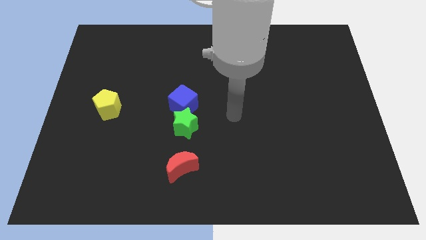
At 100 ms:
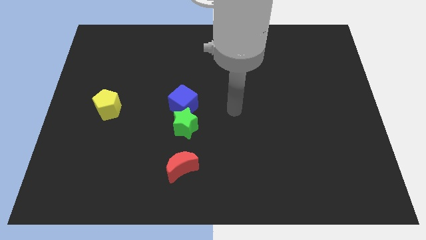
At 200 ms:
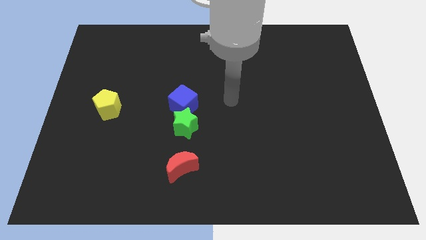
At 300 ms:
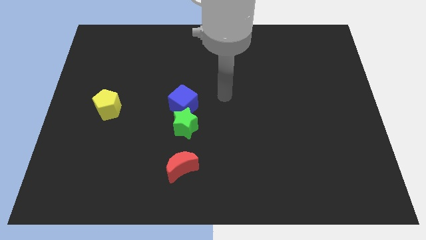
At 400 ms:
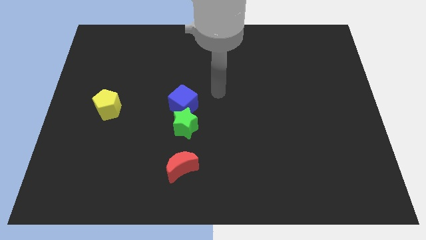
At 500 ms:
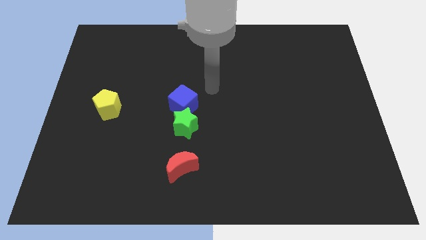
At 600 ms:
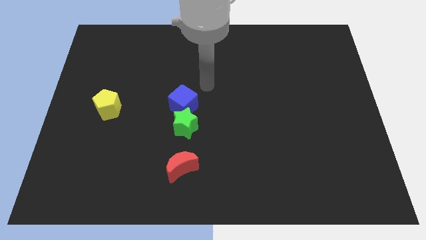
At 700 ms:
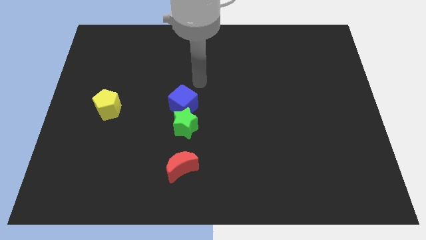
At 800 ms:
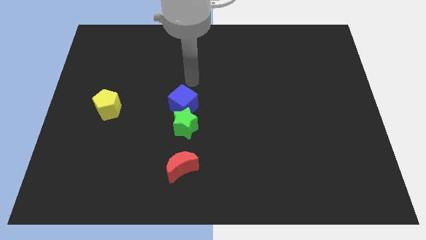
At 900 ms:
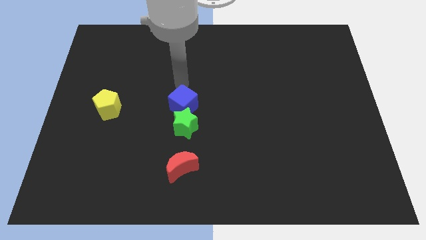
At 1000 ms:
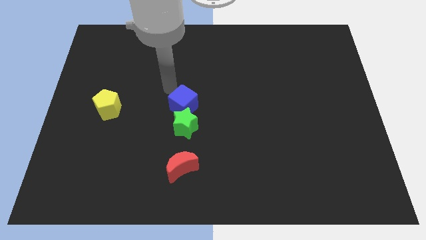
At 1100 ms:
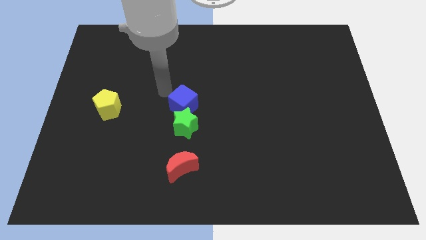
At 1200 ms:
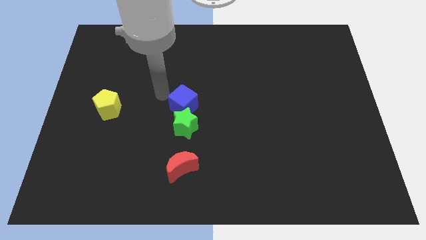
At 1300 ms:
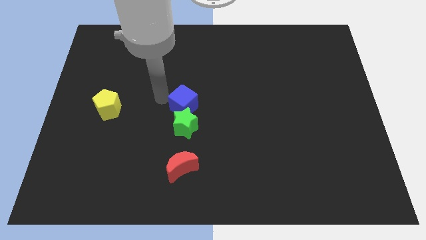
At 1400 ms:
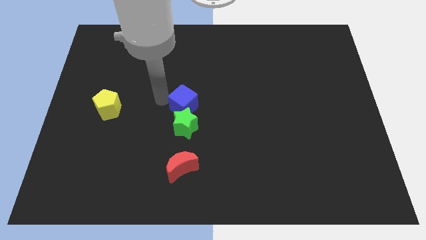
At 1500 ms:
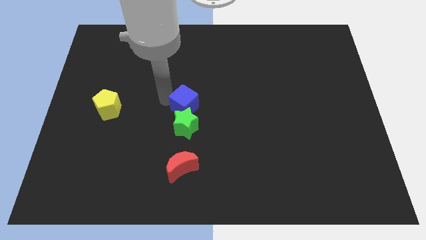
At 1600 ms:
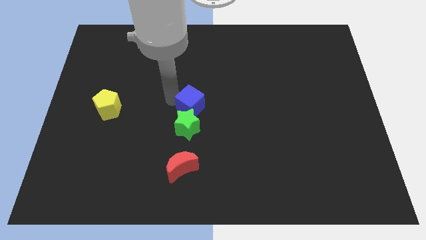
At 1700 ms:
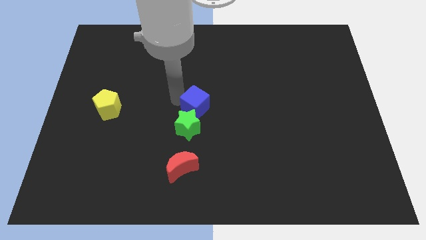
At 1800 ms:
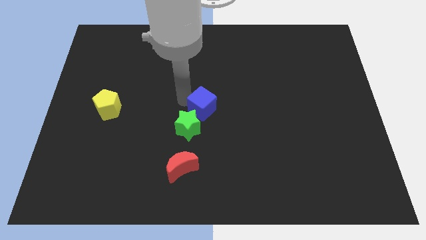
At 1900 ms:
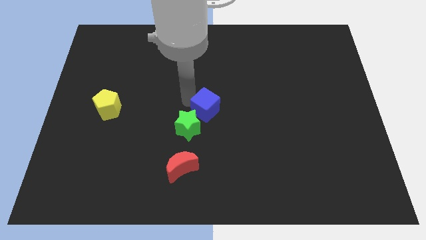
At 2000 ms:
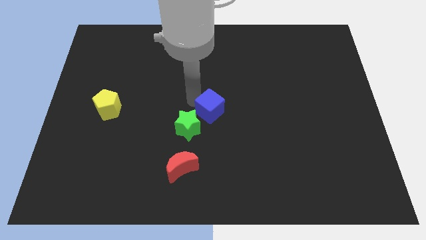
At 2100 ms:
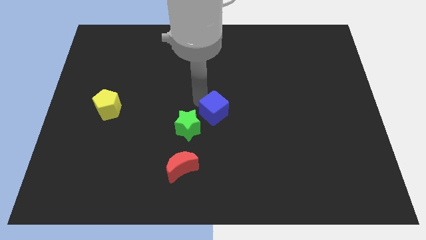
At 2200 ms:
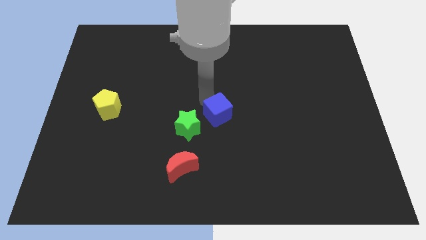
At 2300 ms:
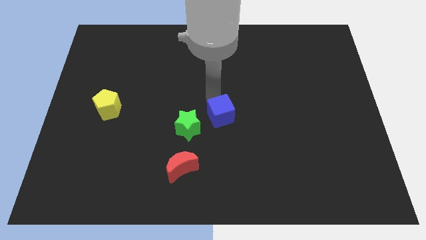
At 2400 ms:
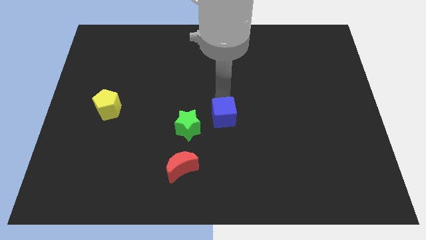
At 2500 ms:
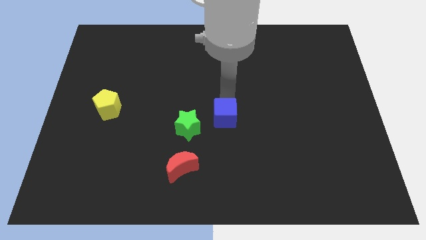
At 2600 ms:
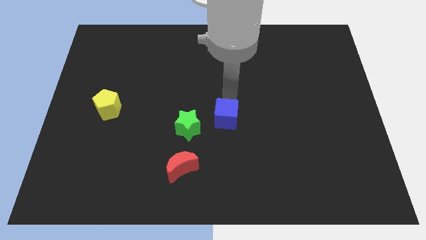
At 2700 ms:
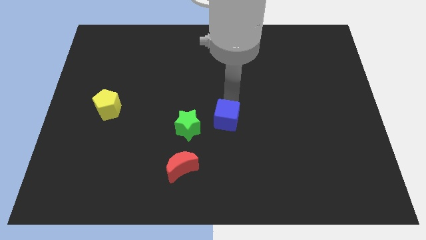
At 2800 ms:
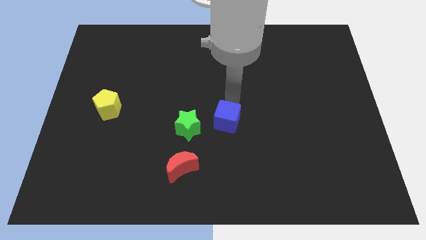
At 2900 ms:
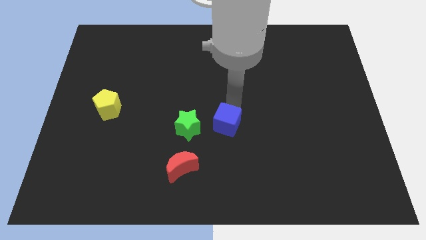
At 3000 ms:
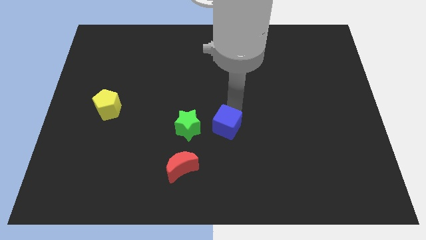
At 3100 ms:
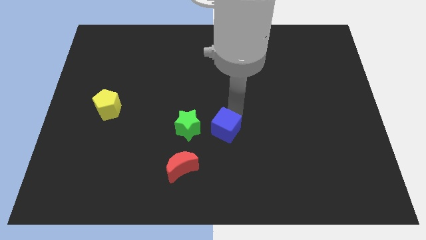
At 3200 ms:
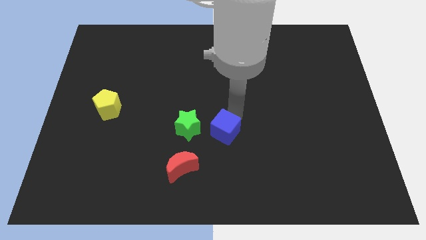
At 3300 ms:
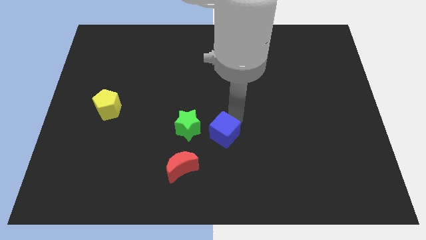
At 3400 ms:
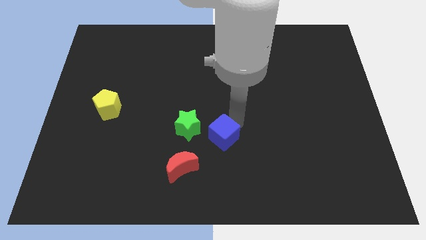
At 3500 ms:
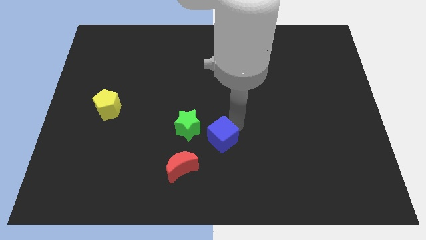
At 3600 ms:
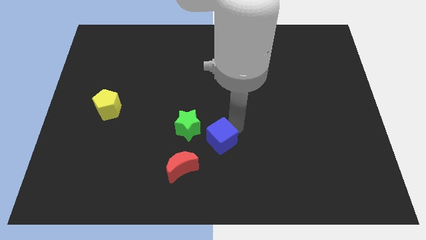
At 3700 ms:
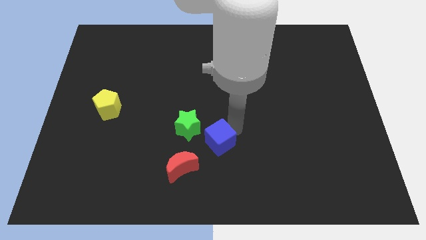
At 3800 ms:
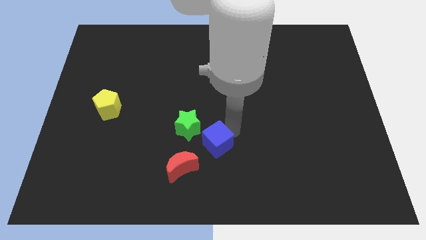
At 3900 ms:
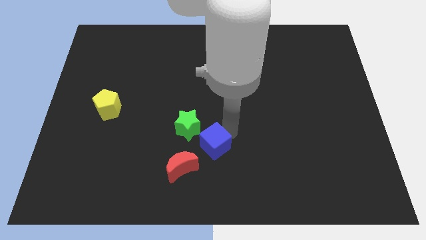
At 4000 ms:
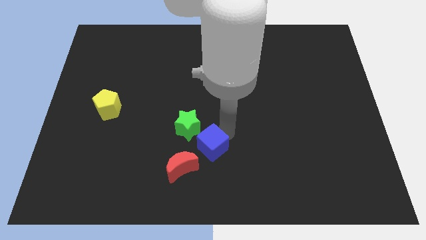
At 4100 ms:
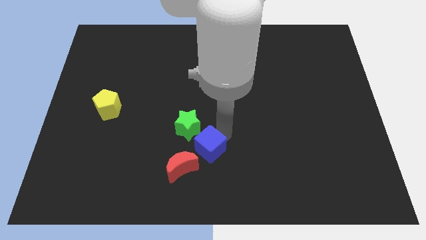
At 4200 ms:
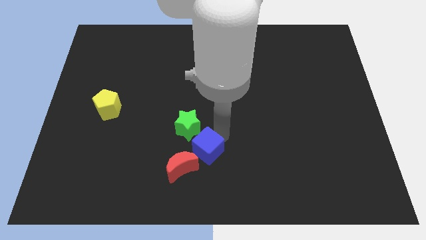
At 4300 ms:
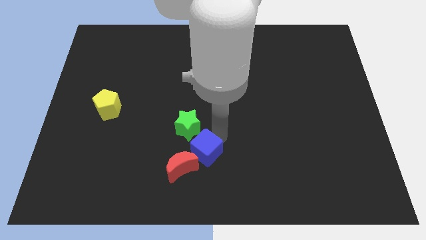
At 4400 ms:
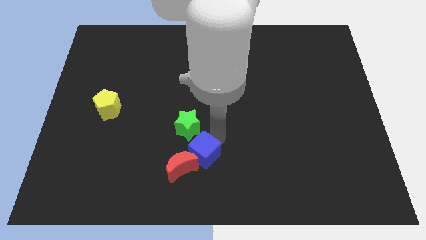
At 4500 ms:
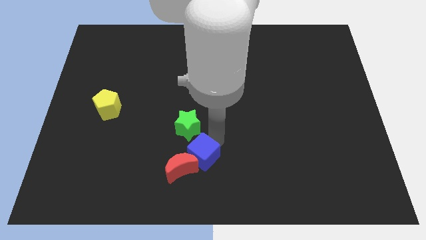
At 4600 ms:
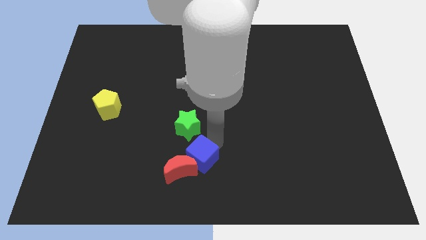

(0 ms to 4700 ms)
push the blue cube next to the red block

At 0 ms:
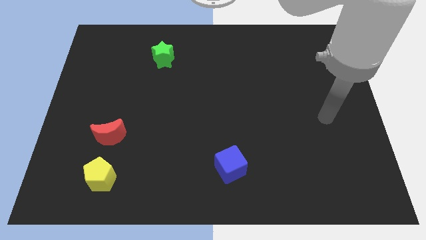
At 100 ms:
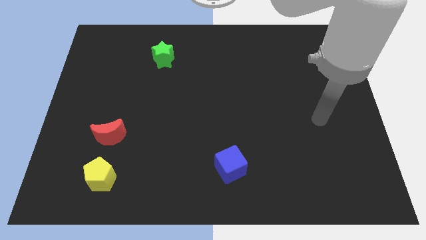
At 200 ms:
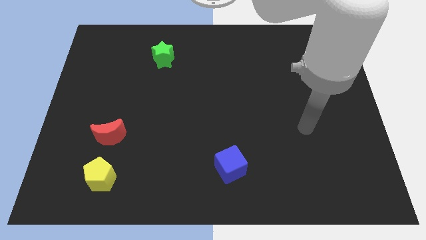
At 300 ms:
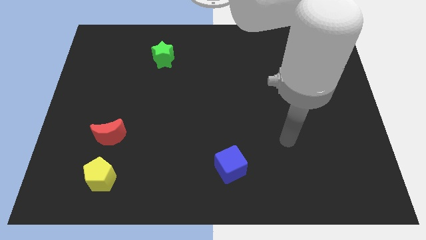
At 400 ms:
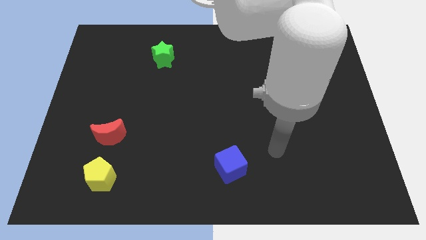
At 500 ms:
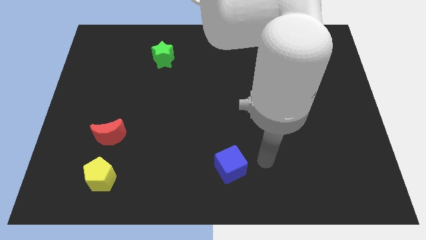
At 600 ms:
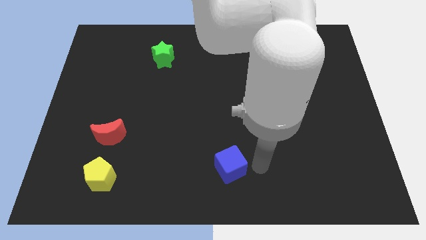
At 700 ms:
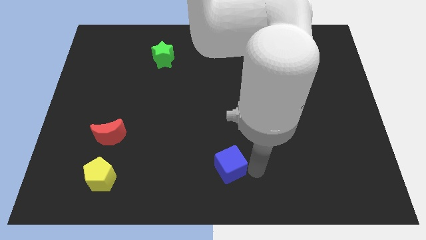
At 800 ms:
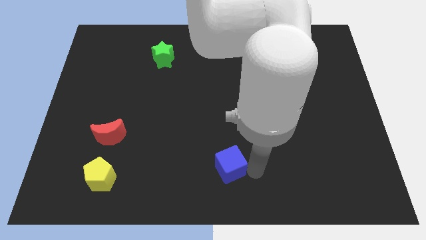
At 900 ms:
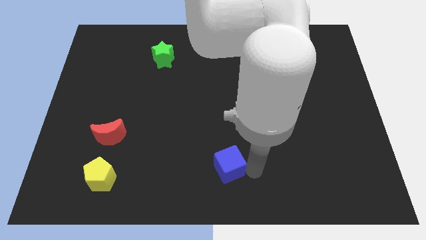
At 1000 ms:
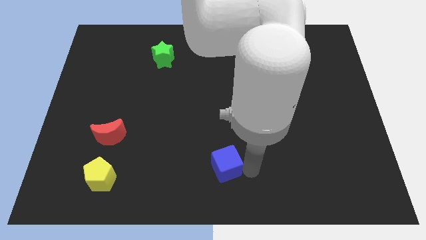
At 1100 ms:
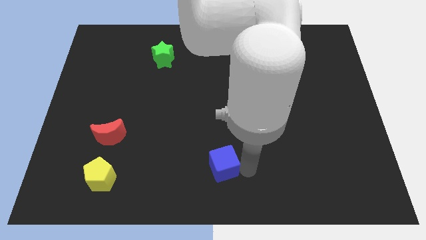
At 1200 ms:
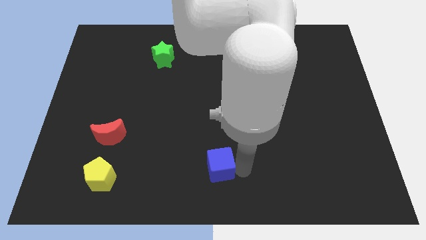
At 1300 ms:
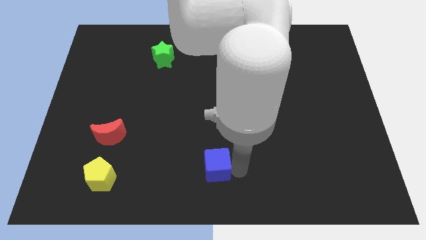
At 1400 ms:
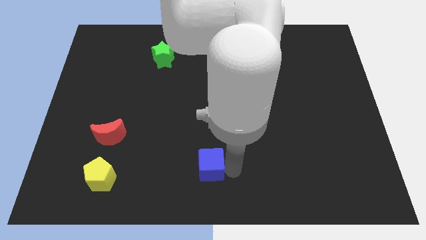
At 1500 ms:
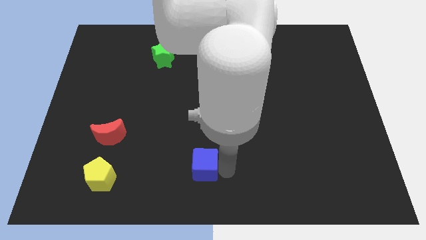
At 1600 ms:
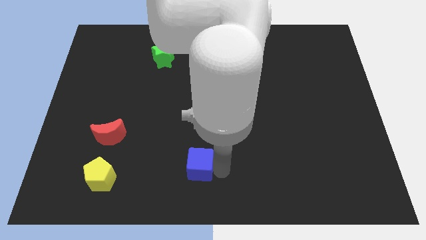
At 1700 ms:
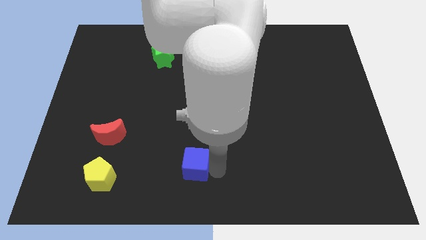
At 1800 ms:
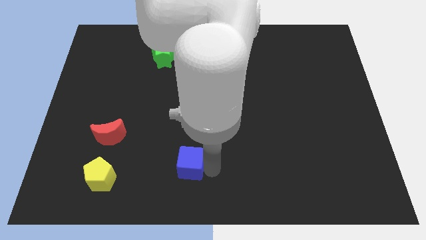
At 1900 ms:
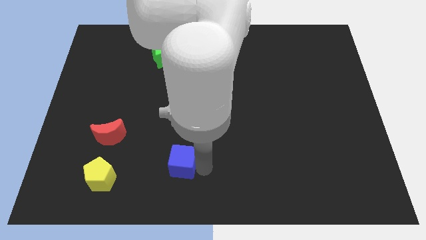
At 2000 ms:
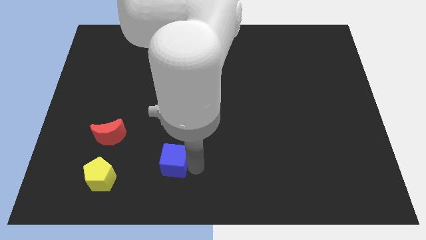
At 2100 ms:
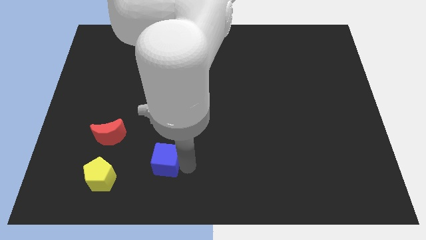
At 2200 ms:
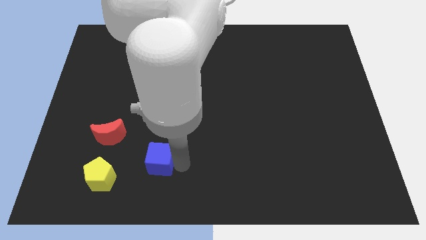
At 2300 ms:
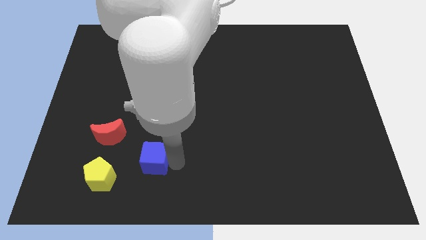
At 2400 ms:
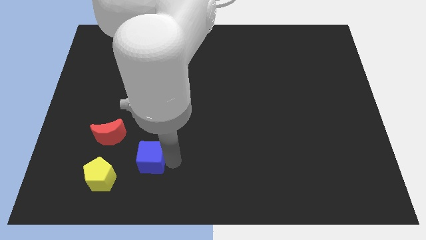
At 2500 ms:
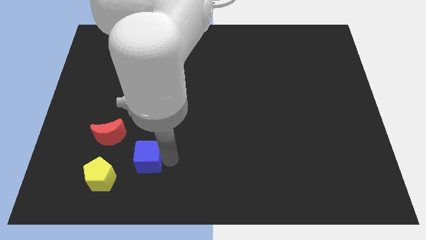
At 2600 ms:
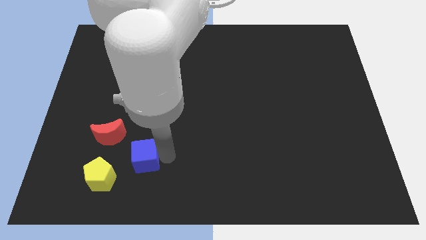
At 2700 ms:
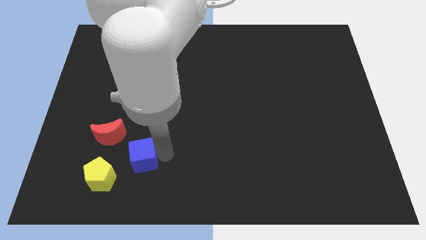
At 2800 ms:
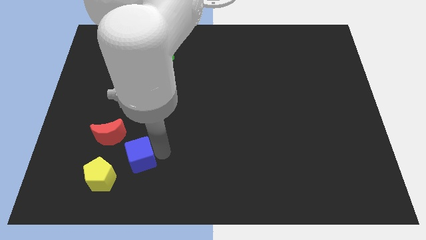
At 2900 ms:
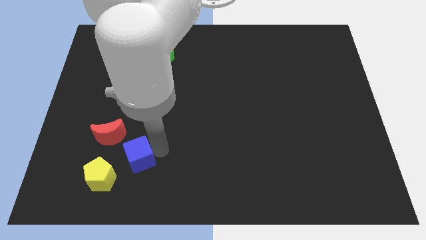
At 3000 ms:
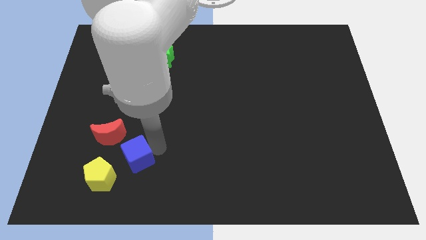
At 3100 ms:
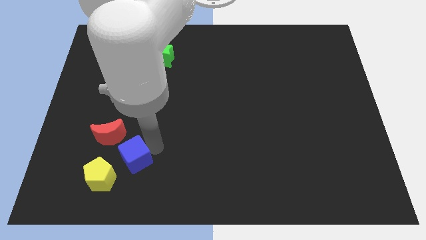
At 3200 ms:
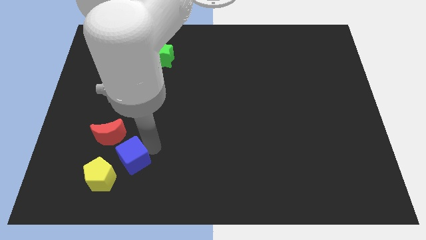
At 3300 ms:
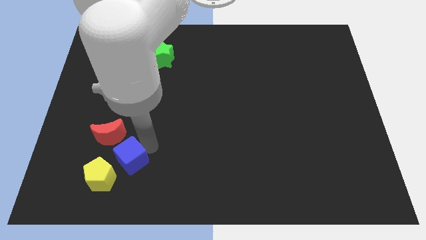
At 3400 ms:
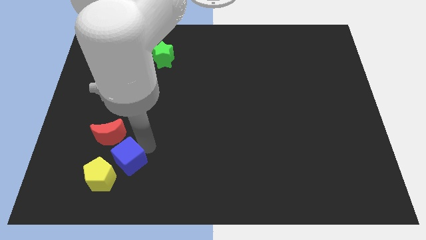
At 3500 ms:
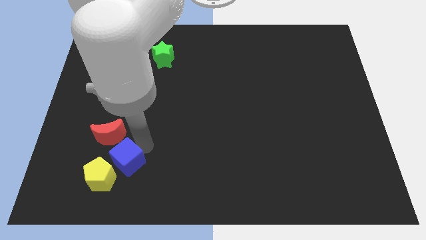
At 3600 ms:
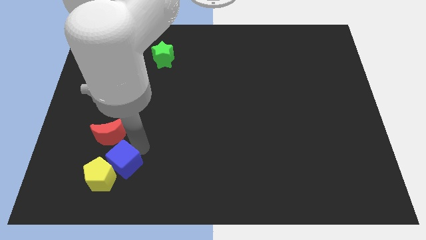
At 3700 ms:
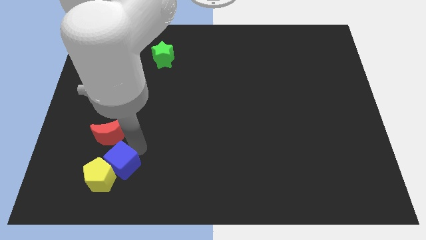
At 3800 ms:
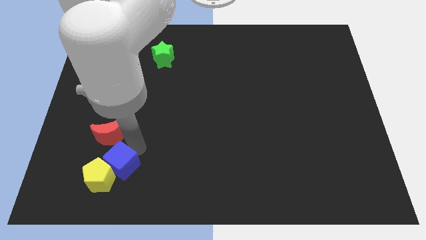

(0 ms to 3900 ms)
put the blue block close to the yellow block
